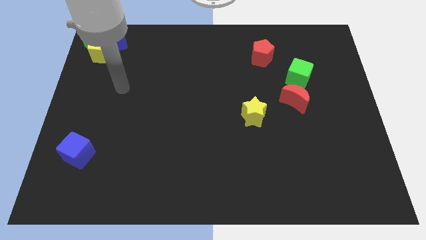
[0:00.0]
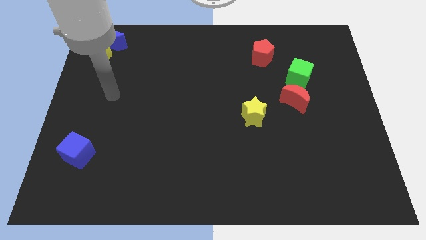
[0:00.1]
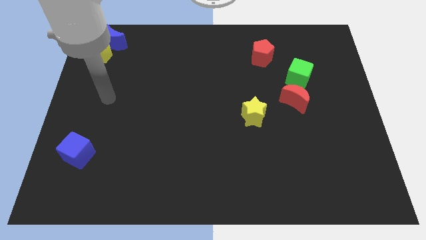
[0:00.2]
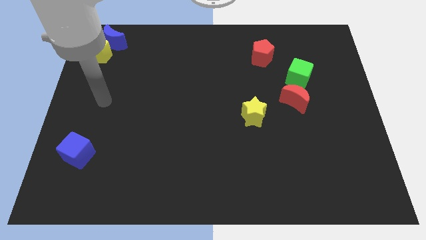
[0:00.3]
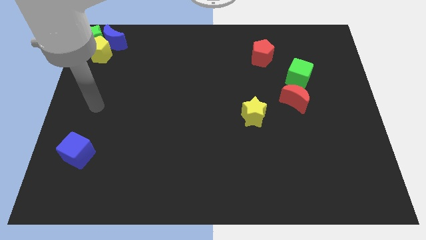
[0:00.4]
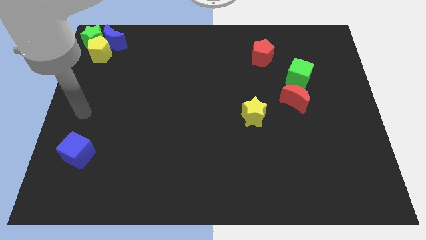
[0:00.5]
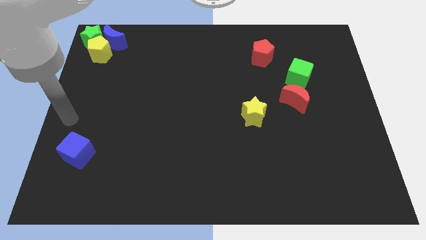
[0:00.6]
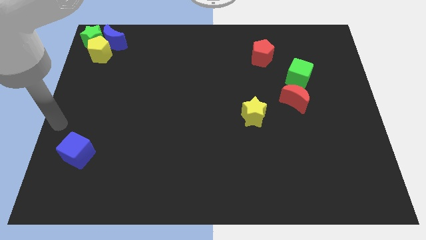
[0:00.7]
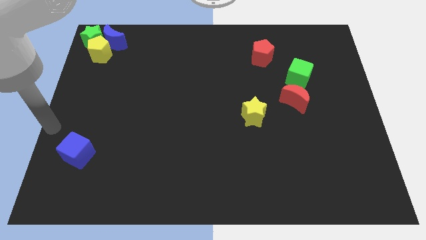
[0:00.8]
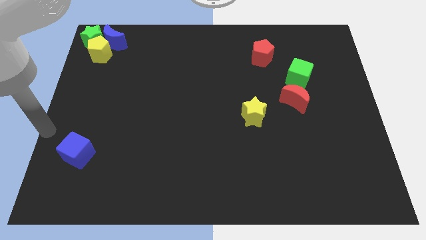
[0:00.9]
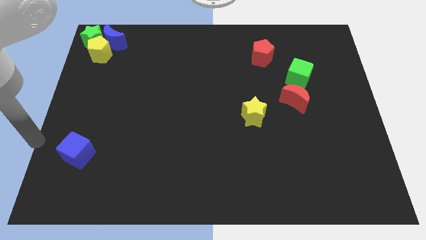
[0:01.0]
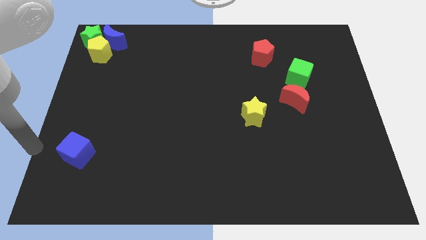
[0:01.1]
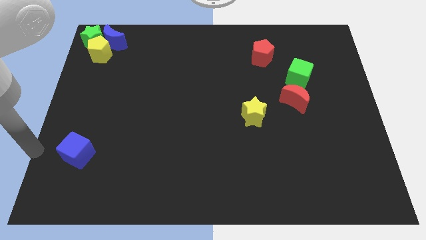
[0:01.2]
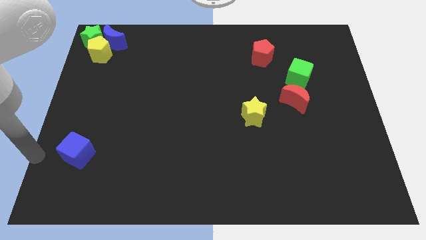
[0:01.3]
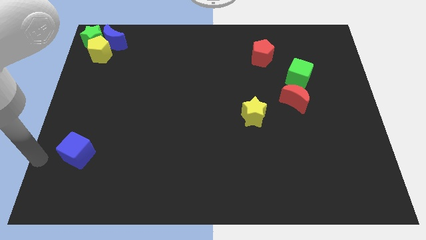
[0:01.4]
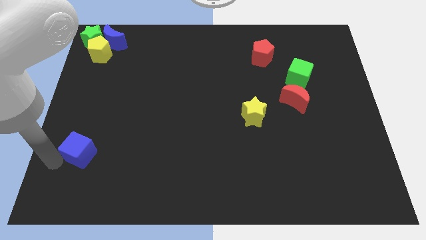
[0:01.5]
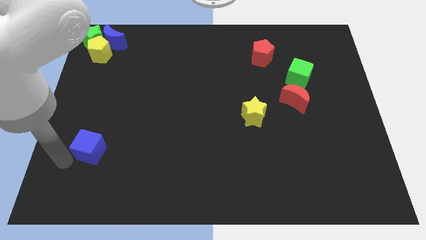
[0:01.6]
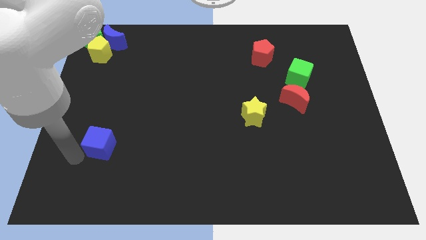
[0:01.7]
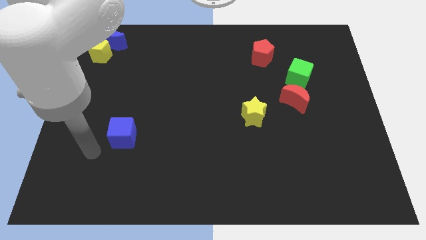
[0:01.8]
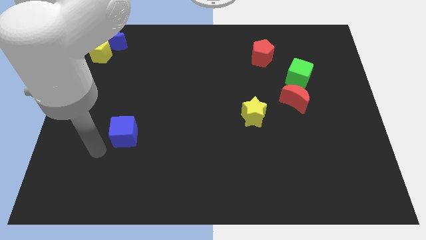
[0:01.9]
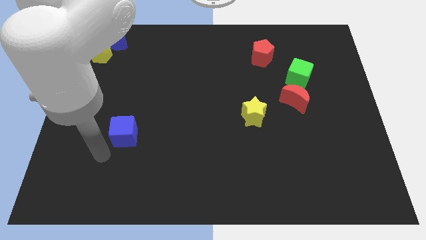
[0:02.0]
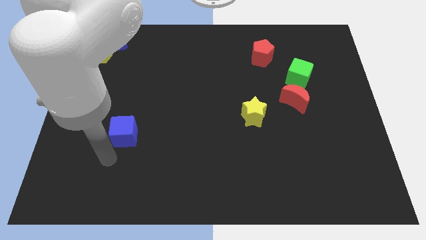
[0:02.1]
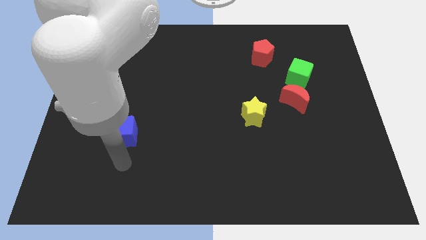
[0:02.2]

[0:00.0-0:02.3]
push the blue cube towards yellow star

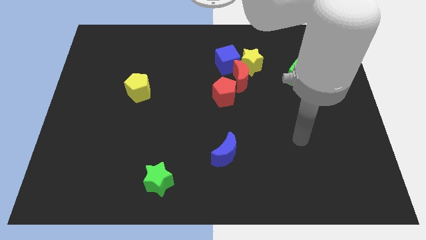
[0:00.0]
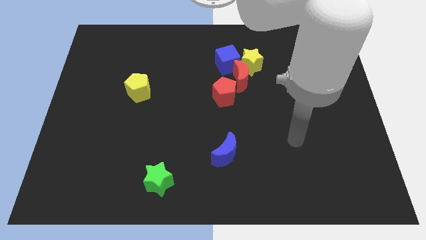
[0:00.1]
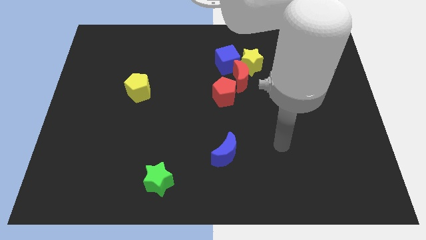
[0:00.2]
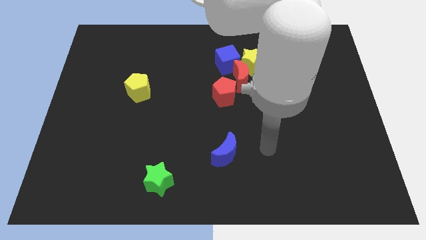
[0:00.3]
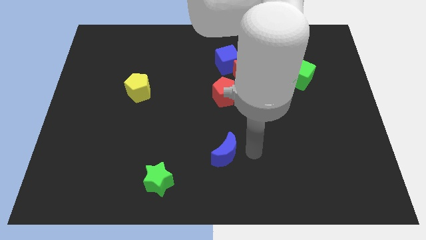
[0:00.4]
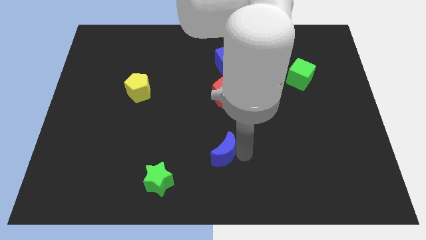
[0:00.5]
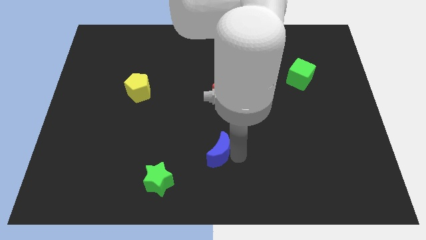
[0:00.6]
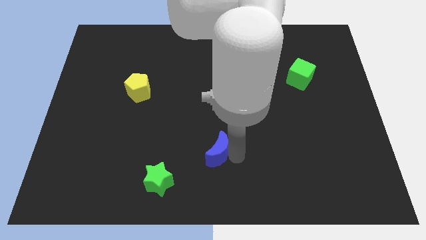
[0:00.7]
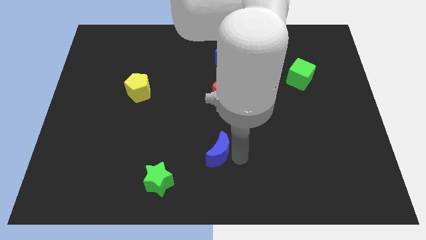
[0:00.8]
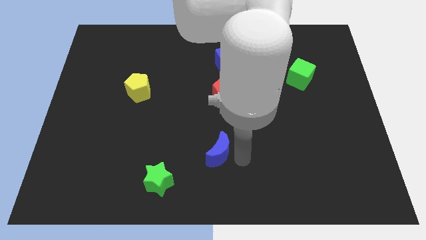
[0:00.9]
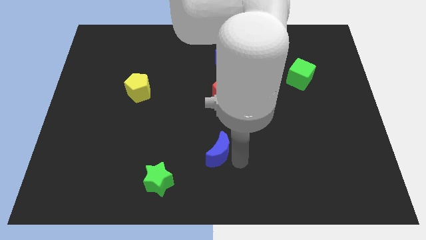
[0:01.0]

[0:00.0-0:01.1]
tap your arm on bottom side of blue moon

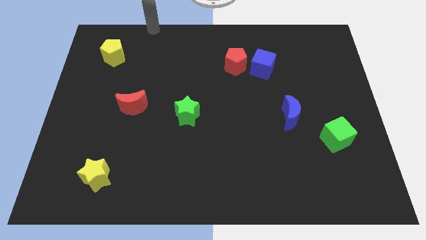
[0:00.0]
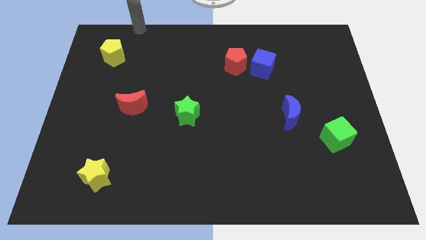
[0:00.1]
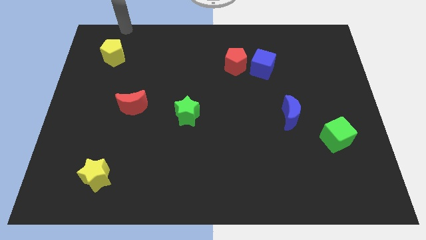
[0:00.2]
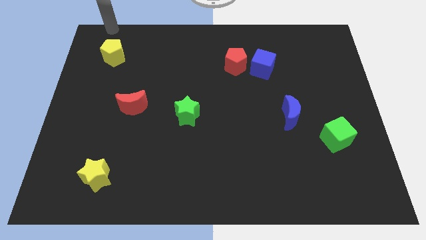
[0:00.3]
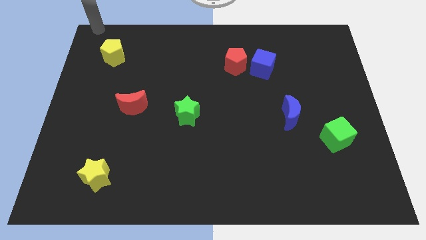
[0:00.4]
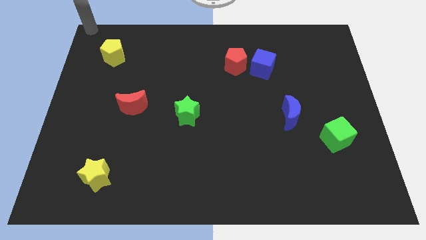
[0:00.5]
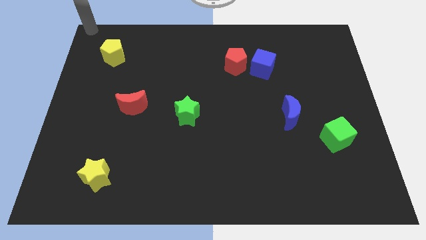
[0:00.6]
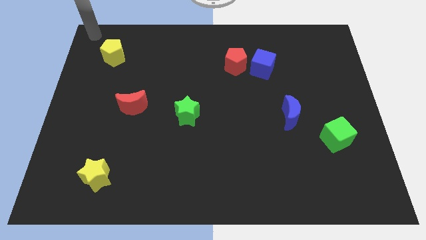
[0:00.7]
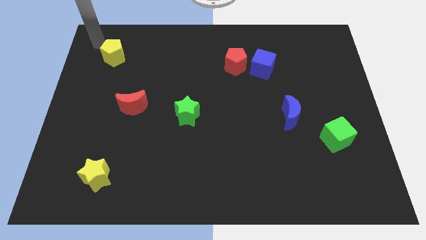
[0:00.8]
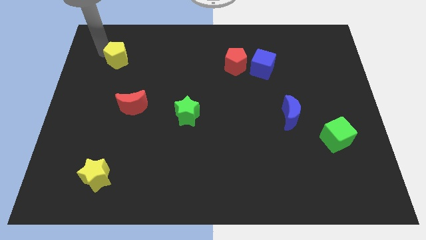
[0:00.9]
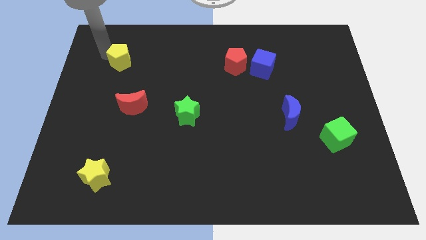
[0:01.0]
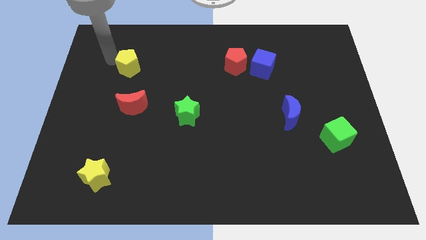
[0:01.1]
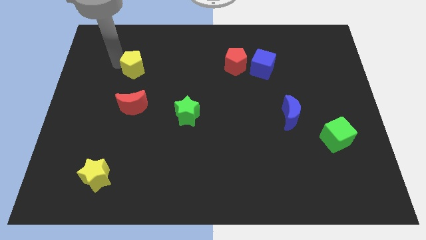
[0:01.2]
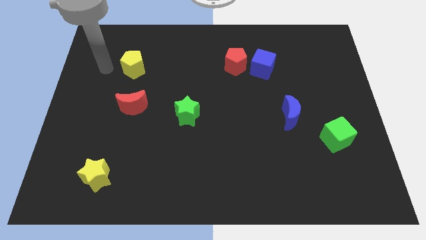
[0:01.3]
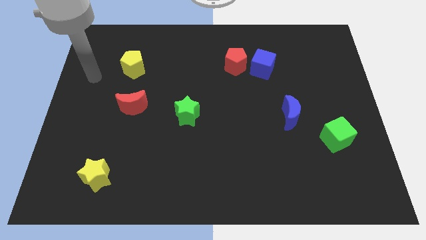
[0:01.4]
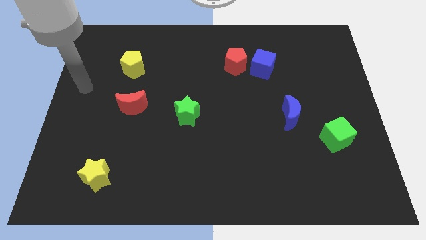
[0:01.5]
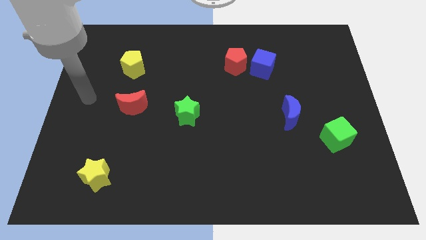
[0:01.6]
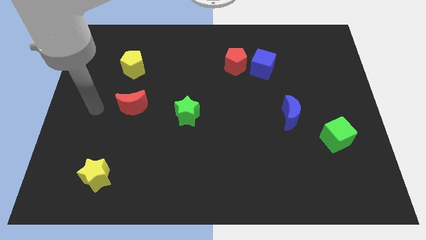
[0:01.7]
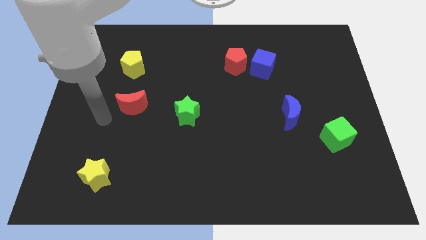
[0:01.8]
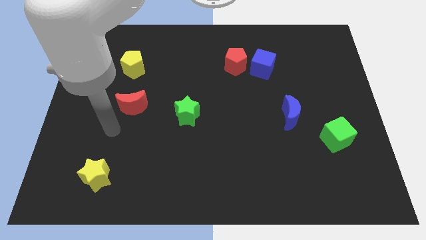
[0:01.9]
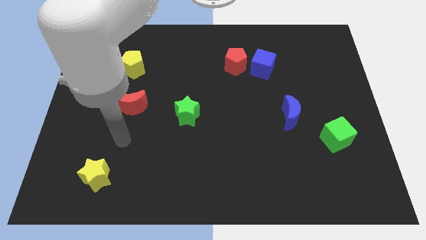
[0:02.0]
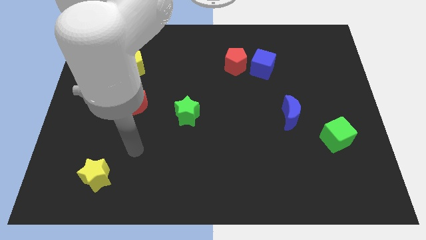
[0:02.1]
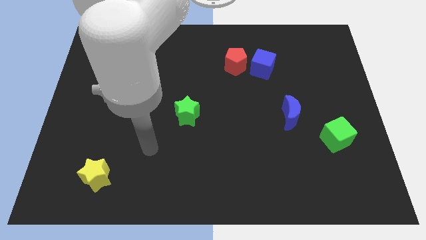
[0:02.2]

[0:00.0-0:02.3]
move yellow pentagon vertical to red moon

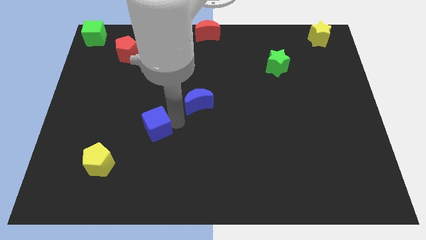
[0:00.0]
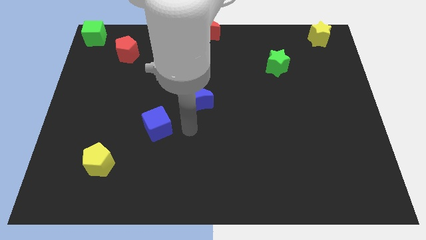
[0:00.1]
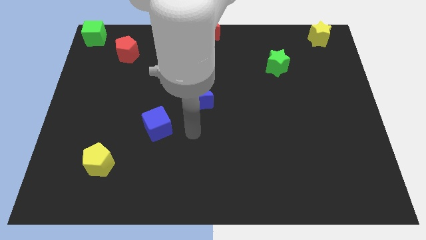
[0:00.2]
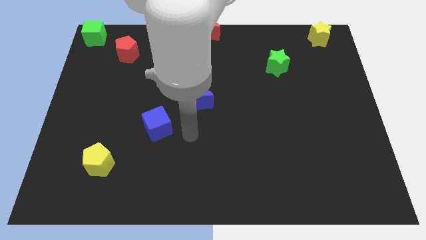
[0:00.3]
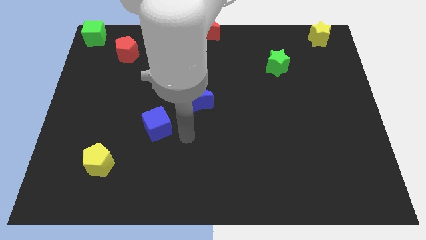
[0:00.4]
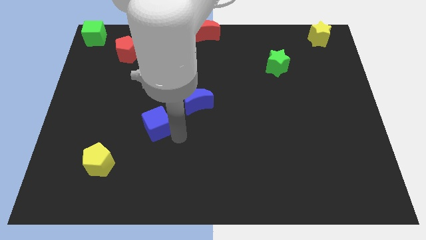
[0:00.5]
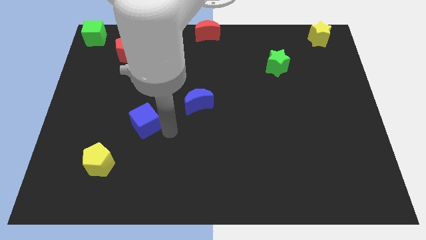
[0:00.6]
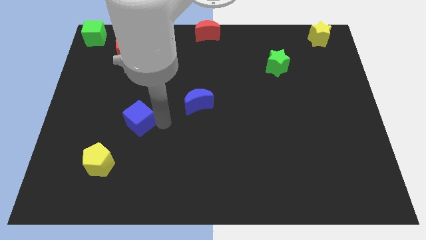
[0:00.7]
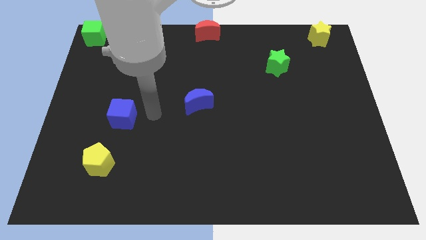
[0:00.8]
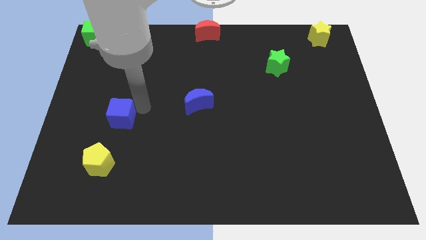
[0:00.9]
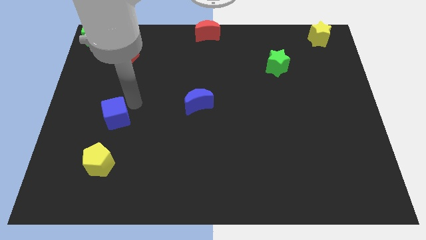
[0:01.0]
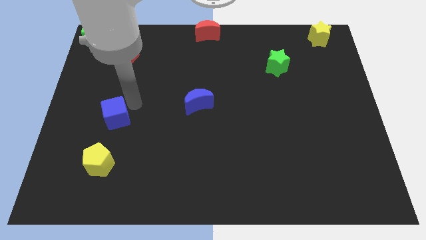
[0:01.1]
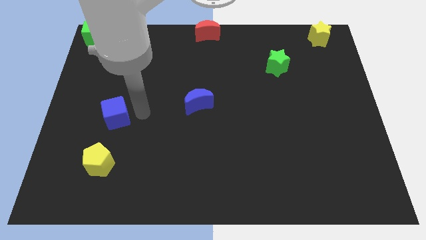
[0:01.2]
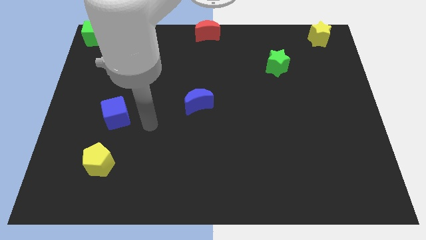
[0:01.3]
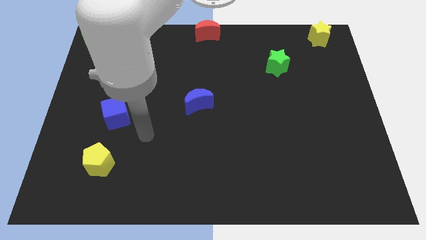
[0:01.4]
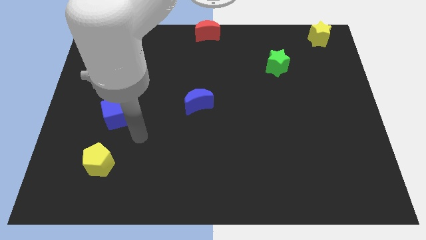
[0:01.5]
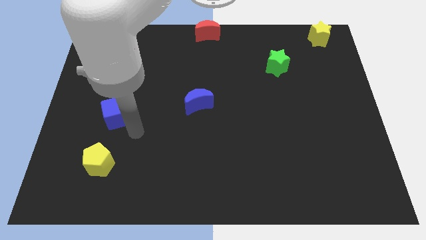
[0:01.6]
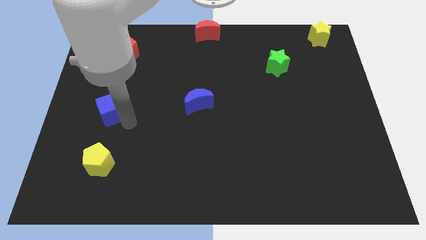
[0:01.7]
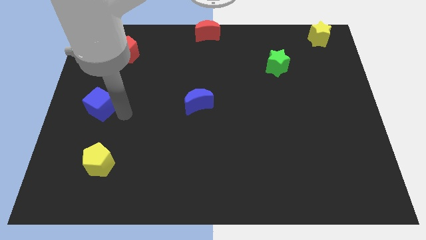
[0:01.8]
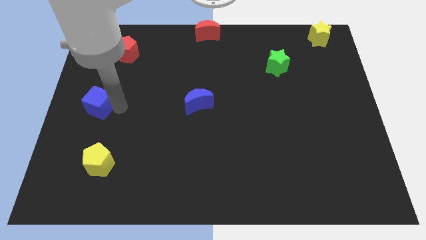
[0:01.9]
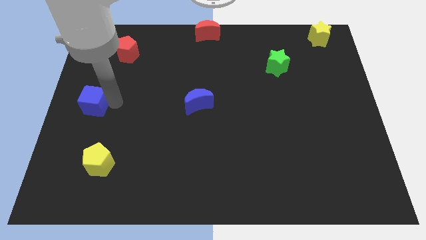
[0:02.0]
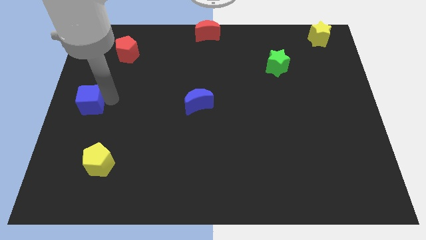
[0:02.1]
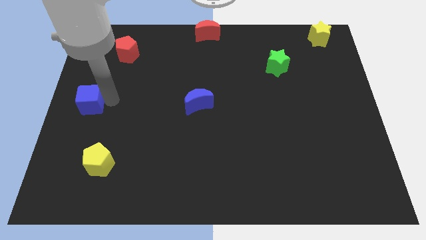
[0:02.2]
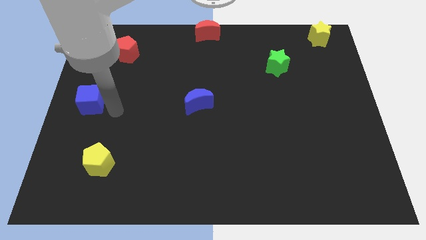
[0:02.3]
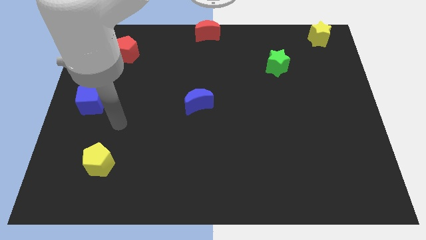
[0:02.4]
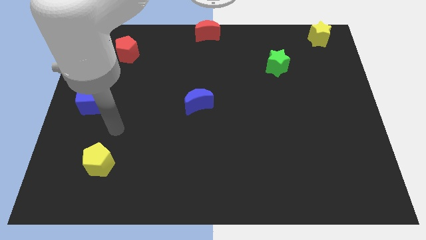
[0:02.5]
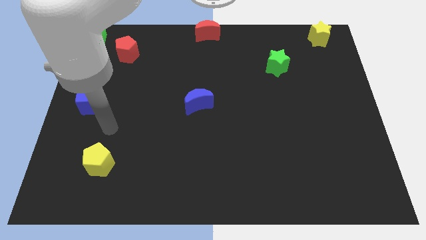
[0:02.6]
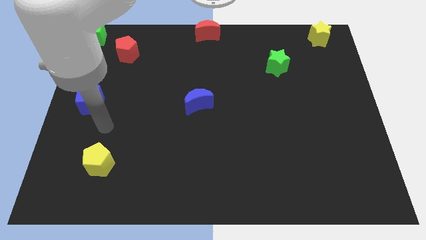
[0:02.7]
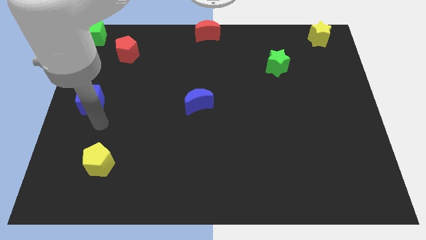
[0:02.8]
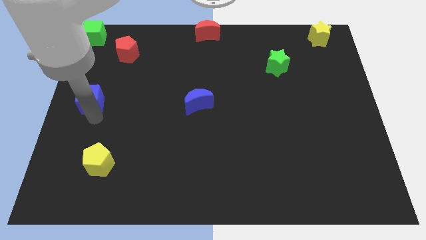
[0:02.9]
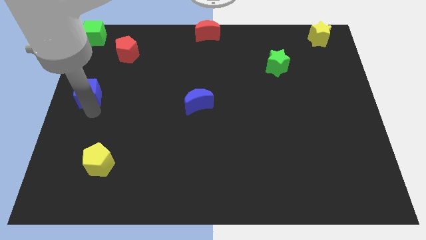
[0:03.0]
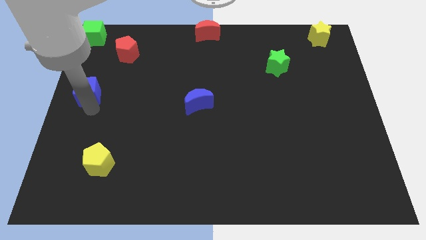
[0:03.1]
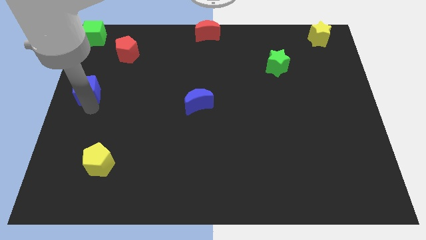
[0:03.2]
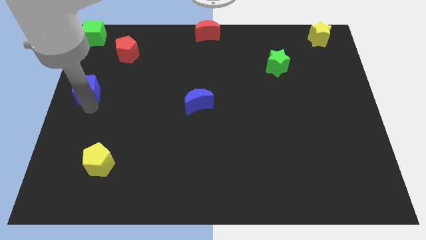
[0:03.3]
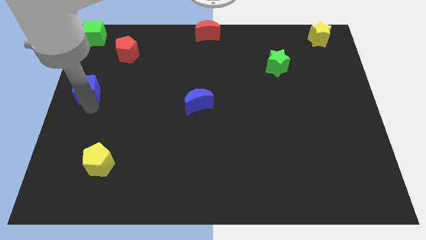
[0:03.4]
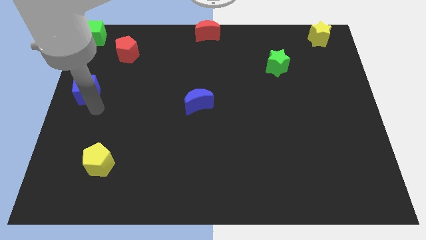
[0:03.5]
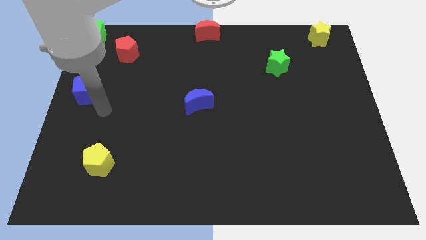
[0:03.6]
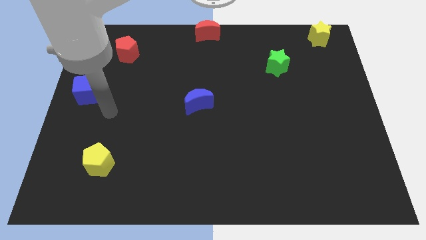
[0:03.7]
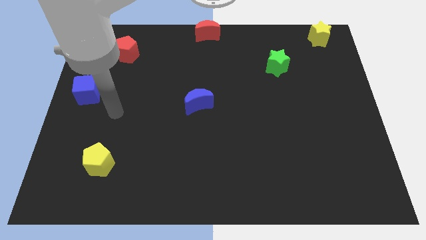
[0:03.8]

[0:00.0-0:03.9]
place the blue cube at the top of the yellow pentagon
